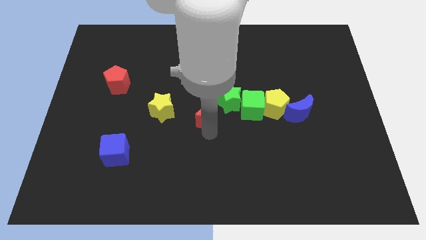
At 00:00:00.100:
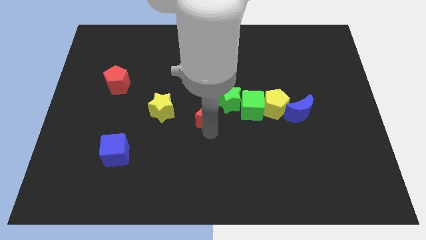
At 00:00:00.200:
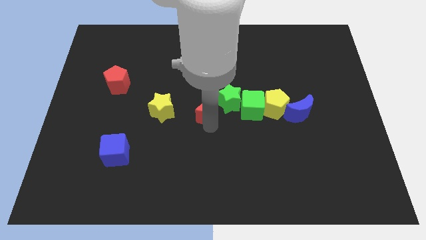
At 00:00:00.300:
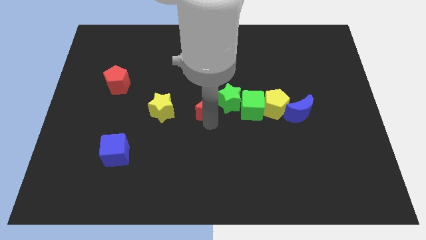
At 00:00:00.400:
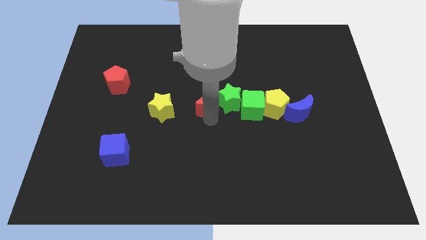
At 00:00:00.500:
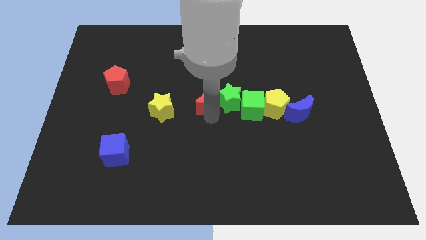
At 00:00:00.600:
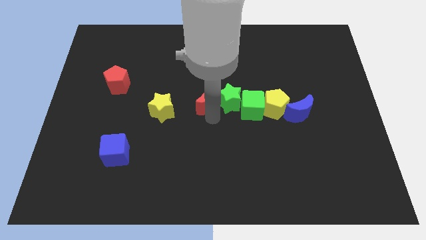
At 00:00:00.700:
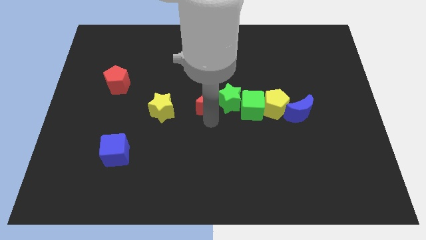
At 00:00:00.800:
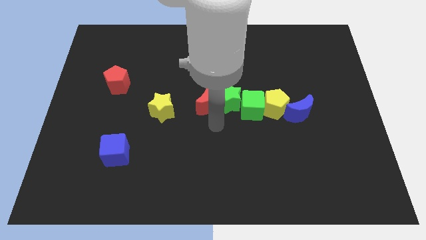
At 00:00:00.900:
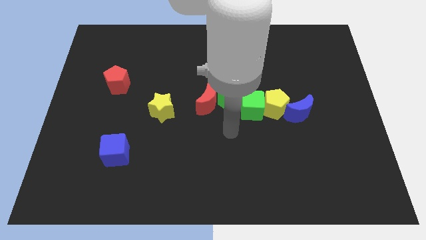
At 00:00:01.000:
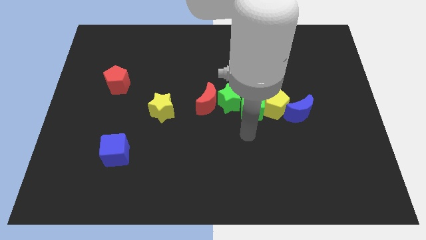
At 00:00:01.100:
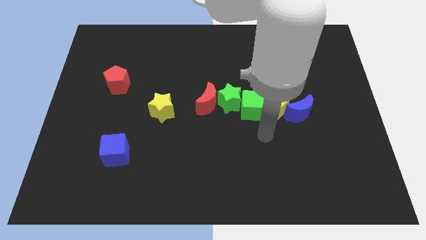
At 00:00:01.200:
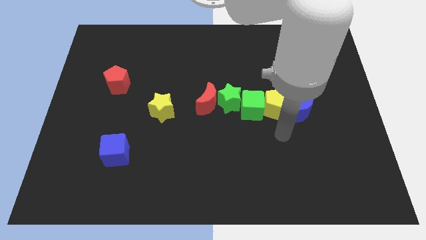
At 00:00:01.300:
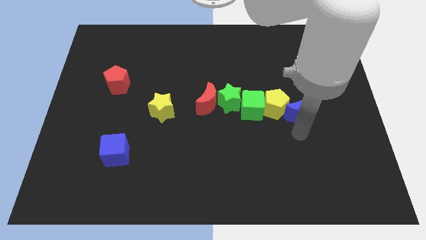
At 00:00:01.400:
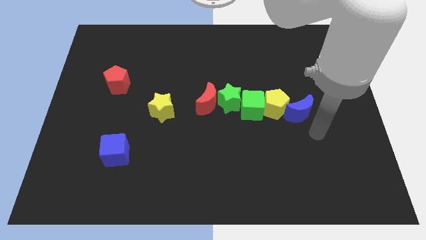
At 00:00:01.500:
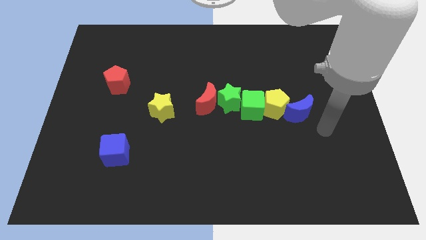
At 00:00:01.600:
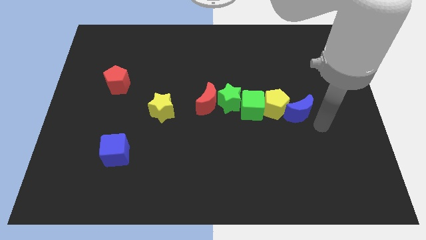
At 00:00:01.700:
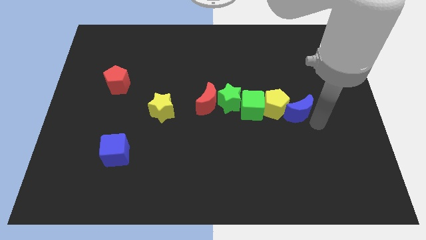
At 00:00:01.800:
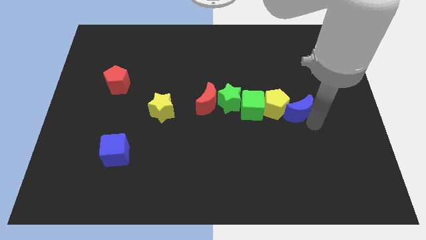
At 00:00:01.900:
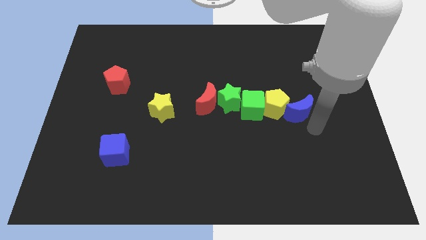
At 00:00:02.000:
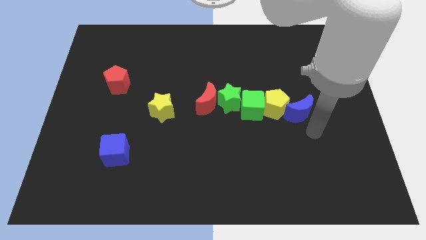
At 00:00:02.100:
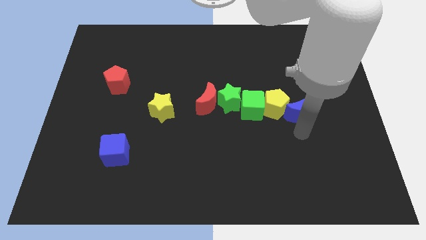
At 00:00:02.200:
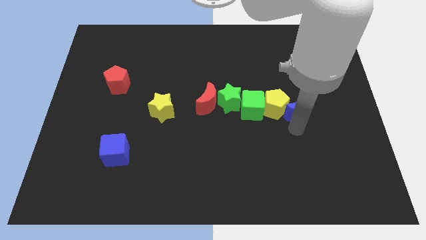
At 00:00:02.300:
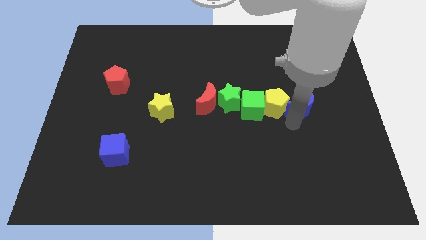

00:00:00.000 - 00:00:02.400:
place the arm down to the blue moon

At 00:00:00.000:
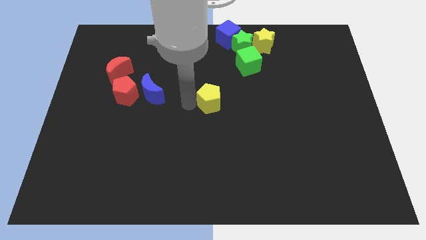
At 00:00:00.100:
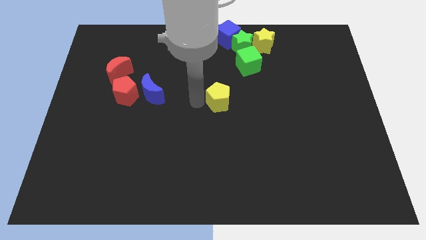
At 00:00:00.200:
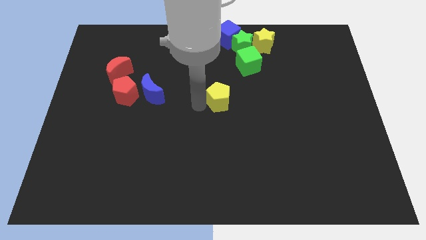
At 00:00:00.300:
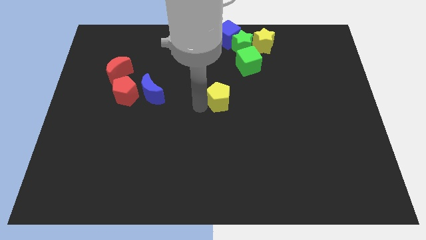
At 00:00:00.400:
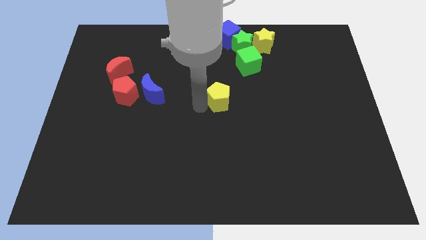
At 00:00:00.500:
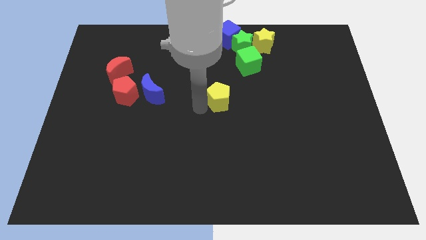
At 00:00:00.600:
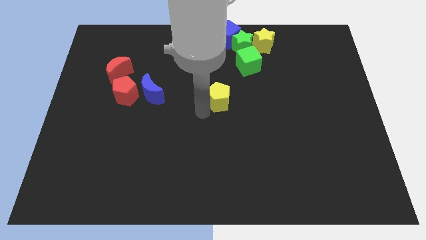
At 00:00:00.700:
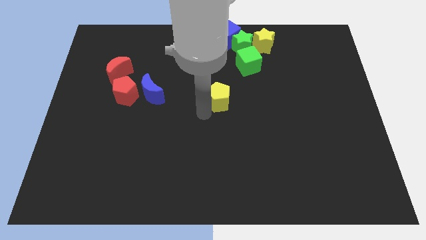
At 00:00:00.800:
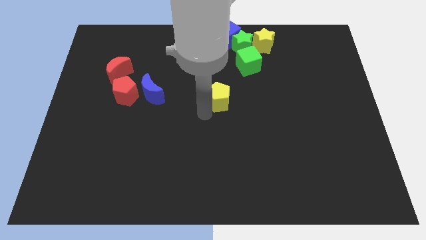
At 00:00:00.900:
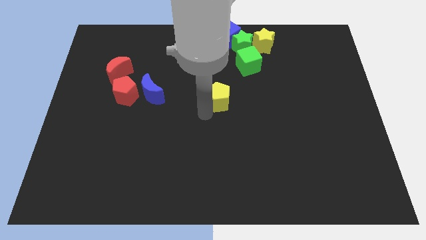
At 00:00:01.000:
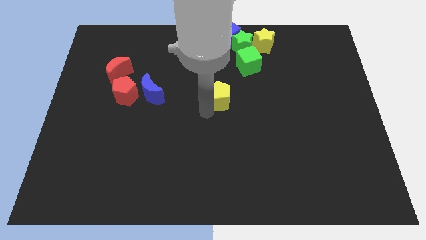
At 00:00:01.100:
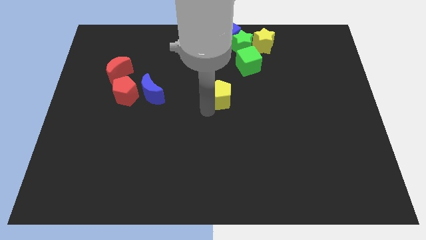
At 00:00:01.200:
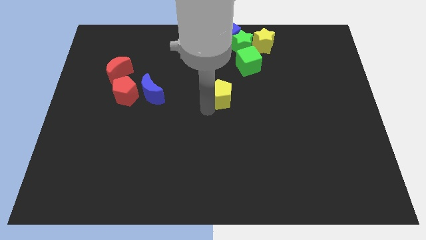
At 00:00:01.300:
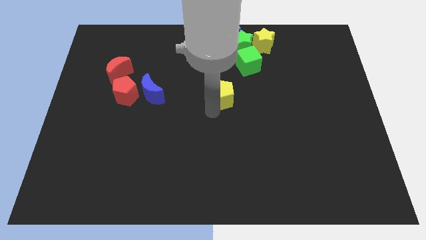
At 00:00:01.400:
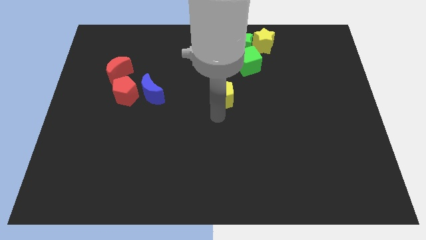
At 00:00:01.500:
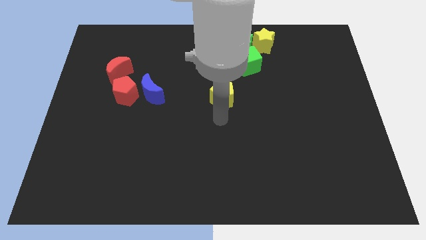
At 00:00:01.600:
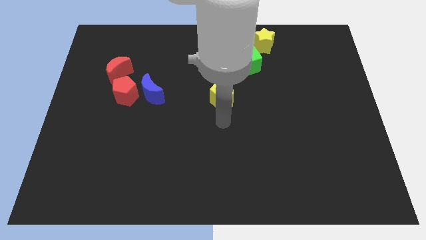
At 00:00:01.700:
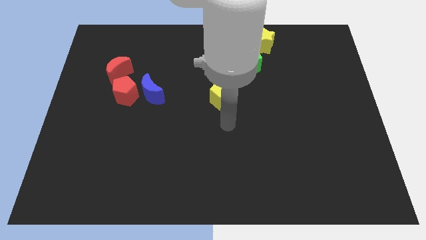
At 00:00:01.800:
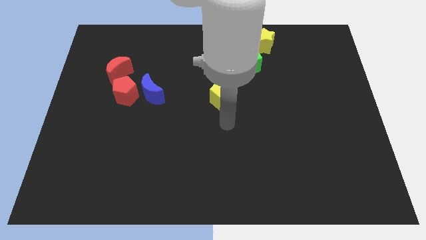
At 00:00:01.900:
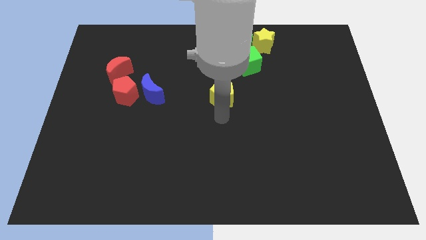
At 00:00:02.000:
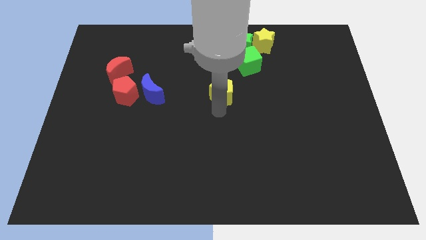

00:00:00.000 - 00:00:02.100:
place the yellow pentagon diagonal to the green cube

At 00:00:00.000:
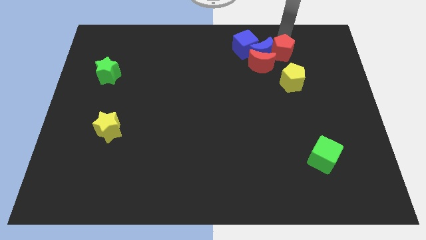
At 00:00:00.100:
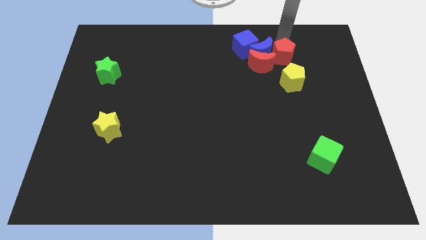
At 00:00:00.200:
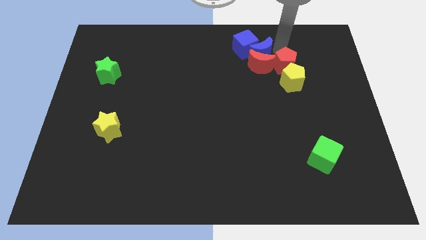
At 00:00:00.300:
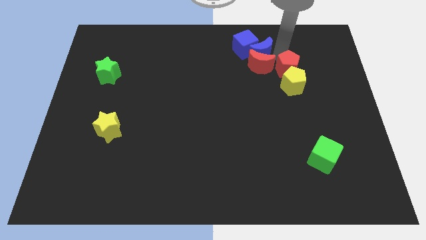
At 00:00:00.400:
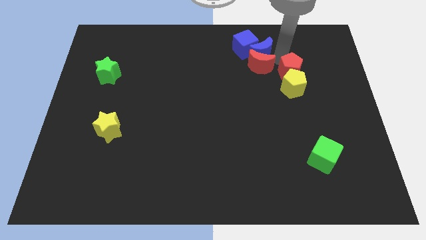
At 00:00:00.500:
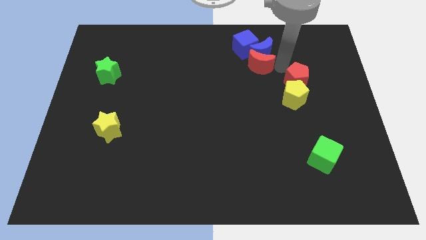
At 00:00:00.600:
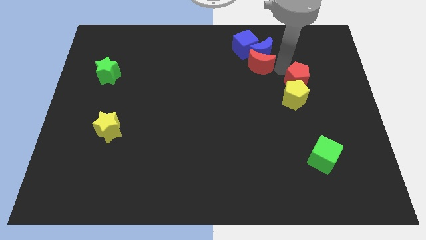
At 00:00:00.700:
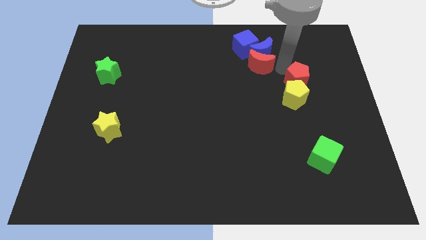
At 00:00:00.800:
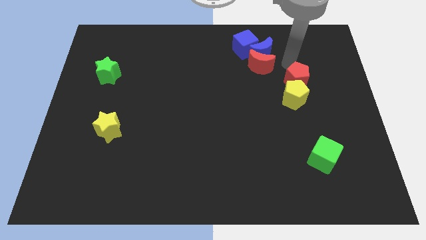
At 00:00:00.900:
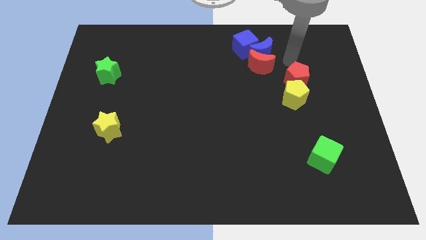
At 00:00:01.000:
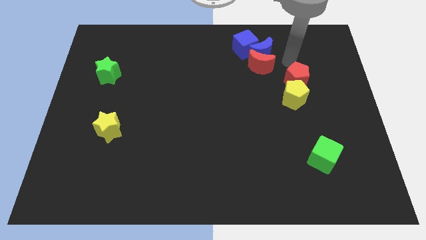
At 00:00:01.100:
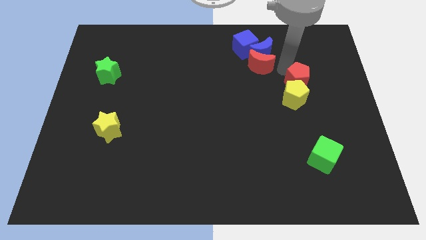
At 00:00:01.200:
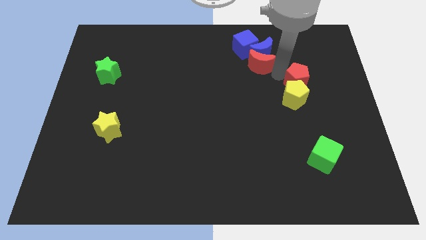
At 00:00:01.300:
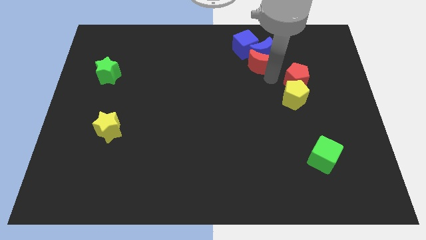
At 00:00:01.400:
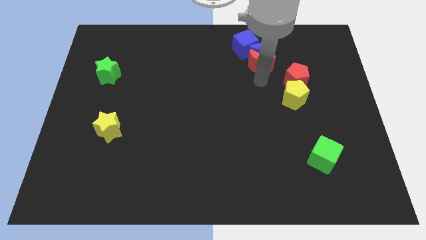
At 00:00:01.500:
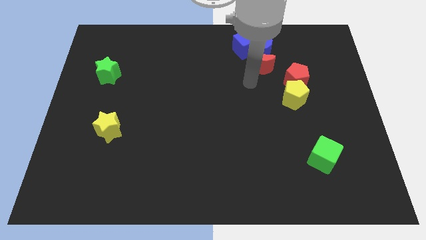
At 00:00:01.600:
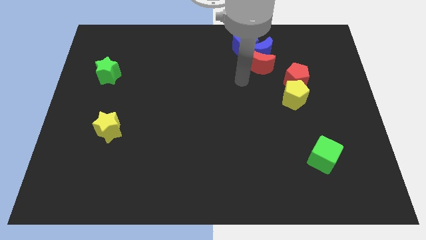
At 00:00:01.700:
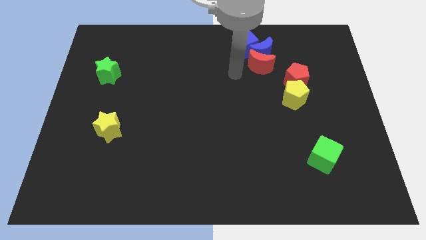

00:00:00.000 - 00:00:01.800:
push the red pentagon along yellow pentagon

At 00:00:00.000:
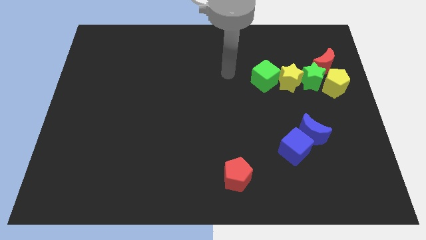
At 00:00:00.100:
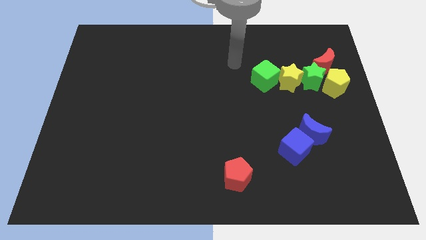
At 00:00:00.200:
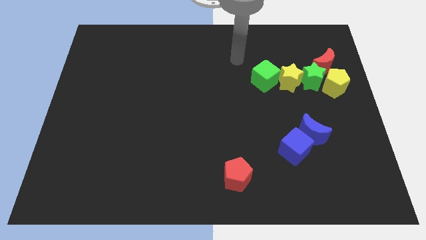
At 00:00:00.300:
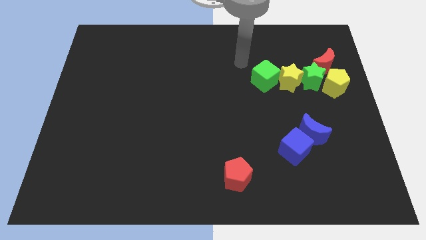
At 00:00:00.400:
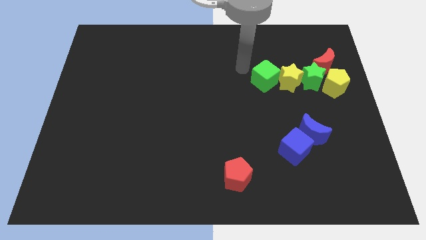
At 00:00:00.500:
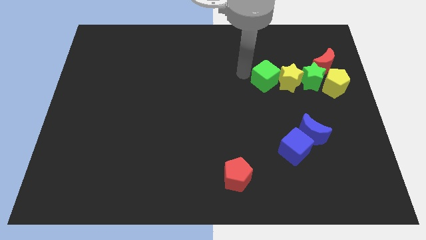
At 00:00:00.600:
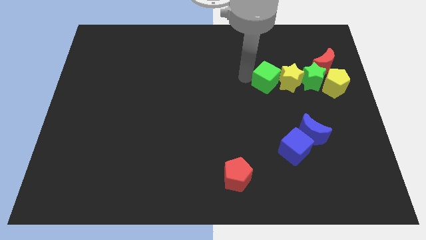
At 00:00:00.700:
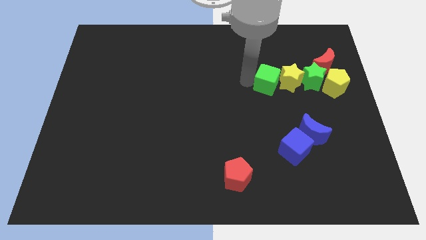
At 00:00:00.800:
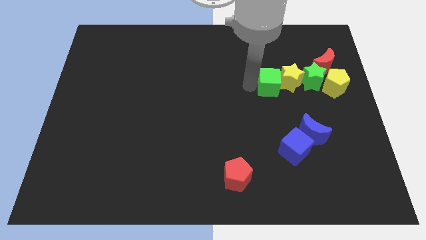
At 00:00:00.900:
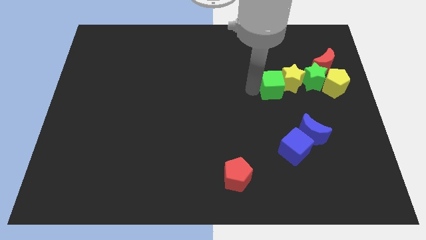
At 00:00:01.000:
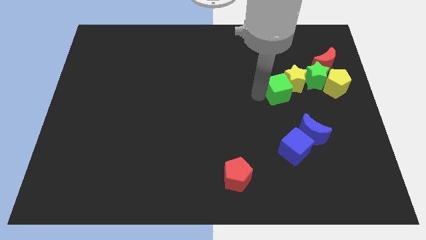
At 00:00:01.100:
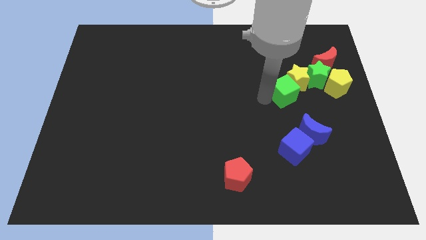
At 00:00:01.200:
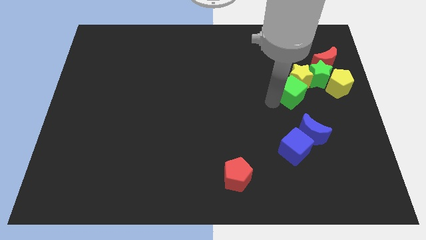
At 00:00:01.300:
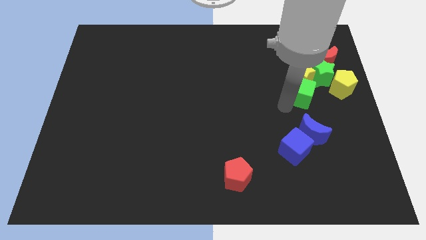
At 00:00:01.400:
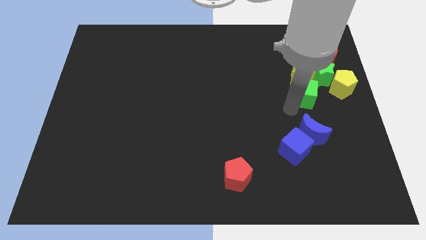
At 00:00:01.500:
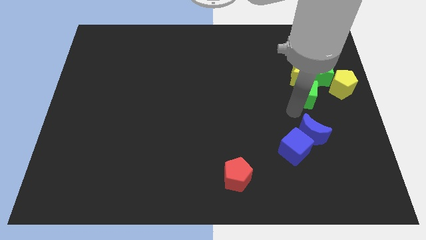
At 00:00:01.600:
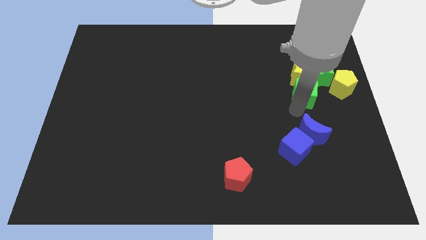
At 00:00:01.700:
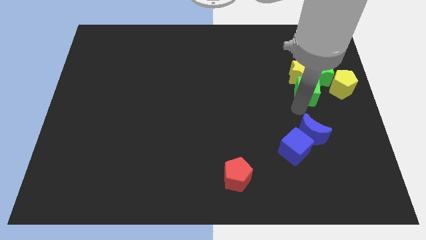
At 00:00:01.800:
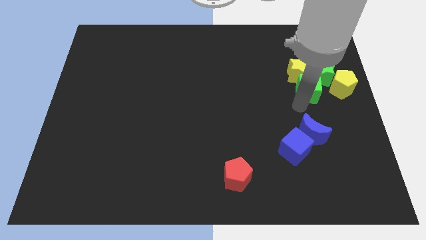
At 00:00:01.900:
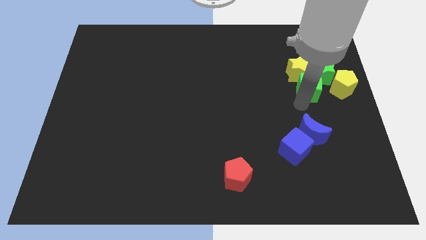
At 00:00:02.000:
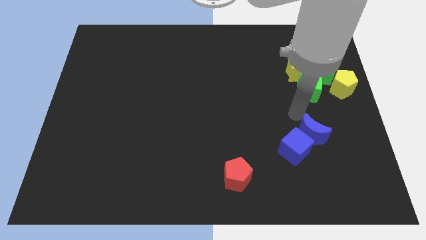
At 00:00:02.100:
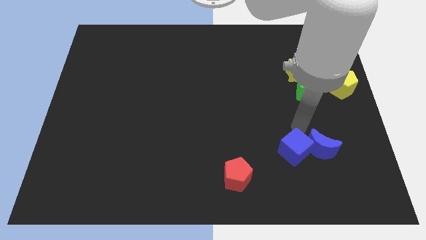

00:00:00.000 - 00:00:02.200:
move the green cube below the yellow star

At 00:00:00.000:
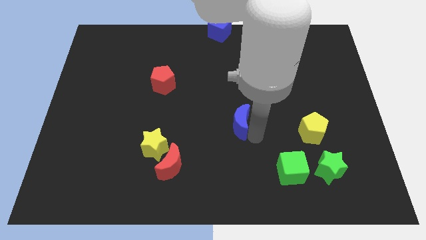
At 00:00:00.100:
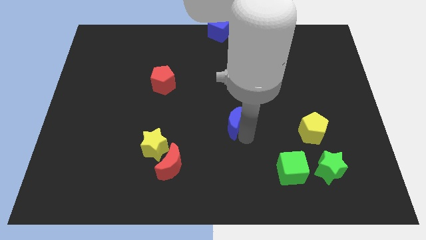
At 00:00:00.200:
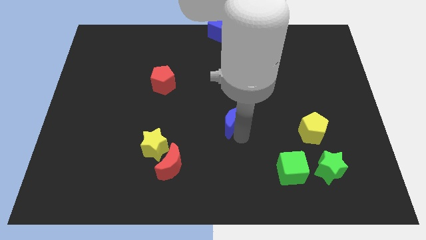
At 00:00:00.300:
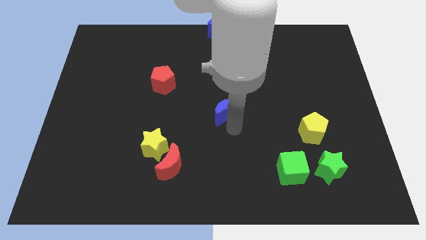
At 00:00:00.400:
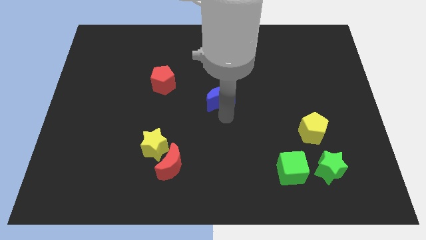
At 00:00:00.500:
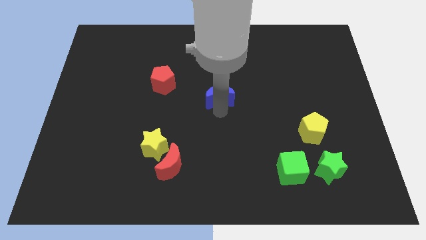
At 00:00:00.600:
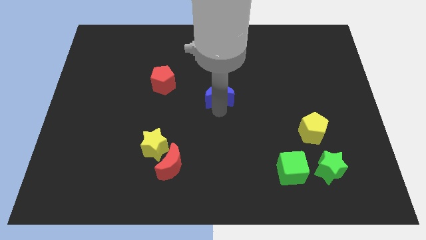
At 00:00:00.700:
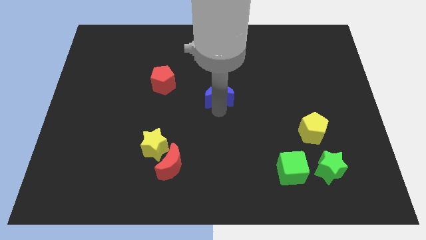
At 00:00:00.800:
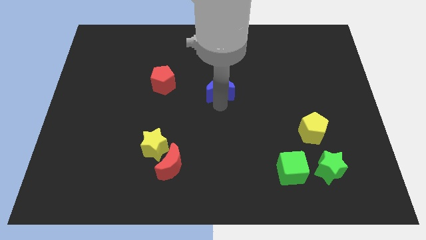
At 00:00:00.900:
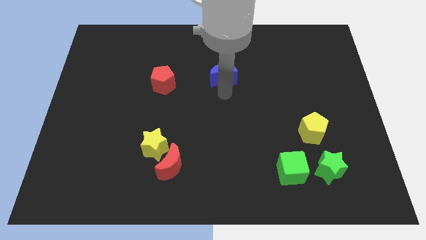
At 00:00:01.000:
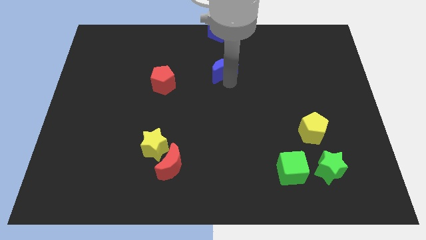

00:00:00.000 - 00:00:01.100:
push the blue crescent to the right of the red pentagon
